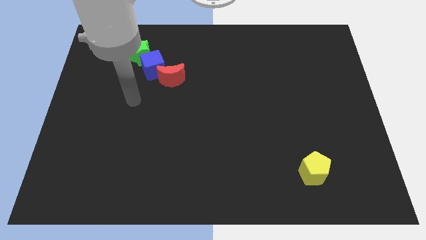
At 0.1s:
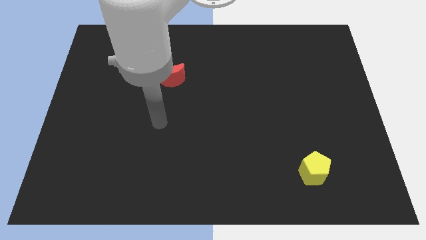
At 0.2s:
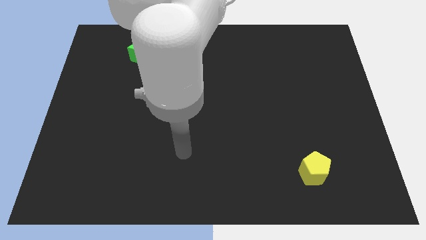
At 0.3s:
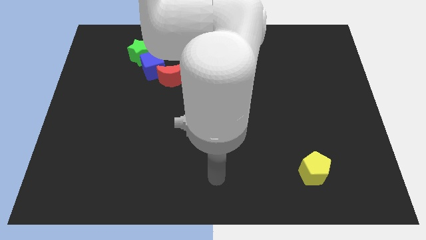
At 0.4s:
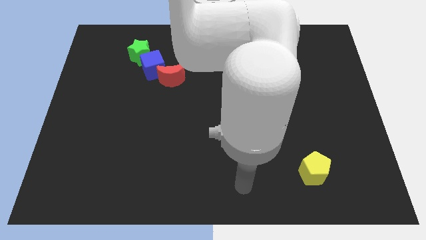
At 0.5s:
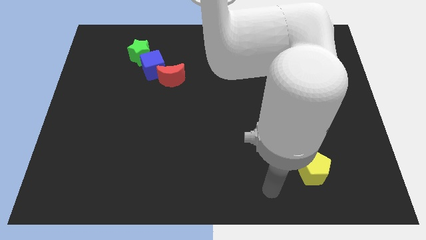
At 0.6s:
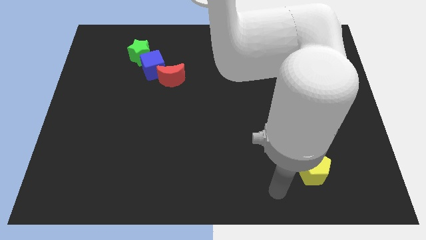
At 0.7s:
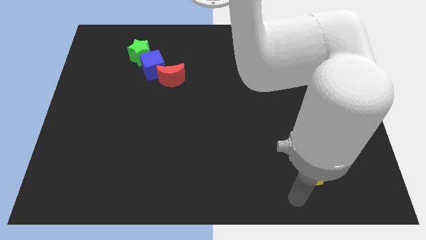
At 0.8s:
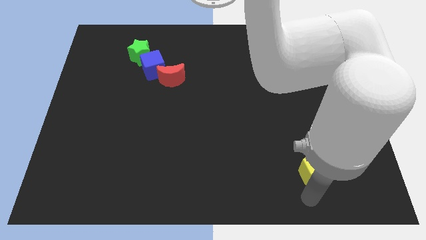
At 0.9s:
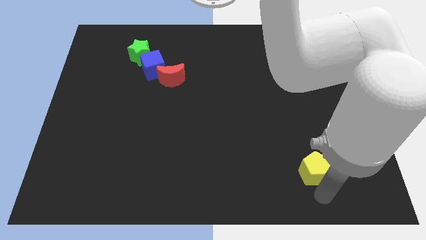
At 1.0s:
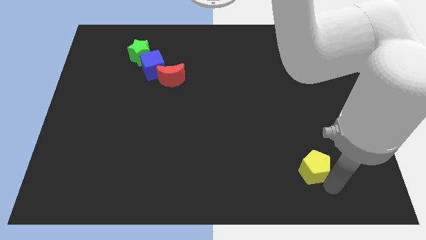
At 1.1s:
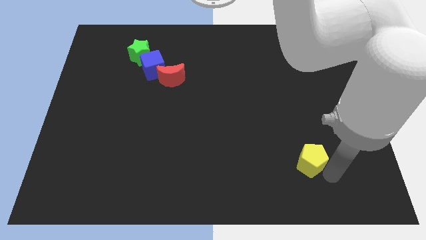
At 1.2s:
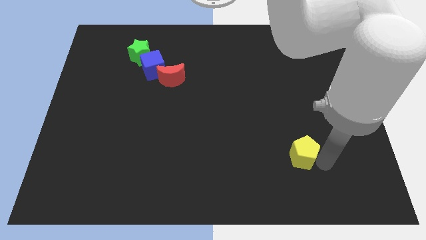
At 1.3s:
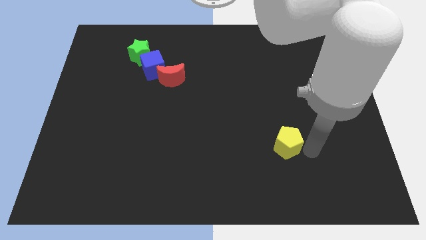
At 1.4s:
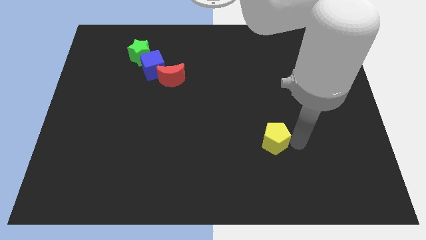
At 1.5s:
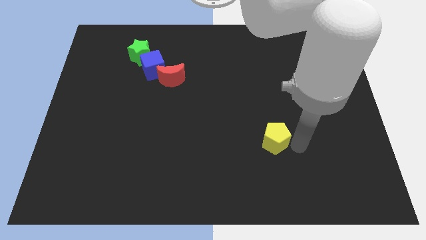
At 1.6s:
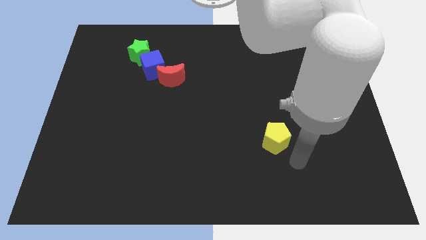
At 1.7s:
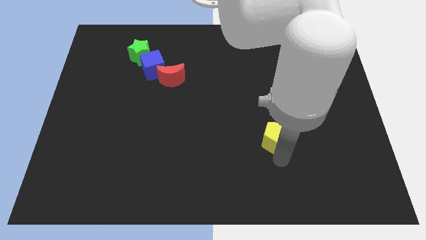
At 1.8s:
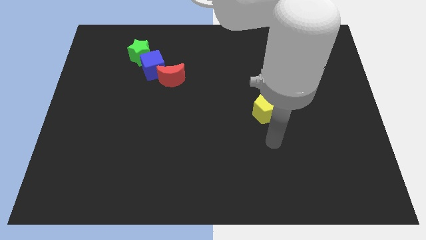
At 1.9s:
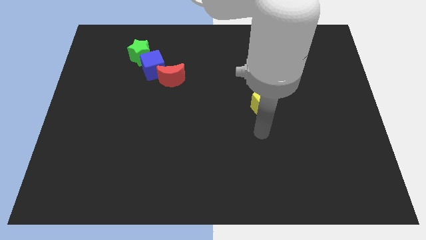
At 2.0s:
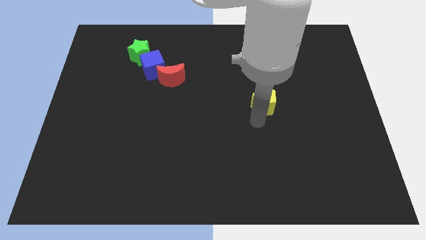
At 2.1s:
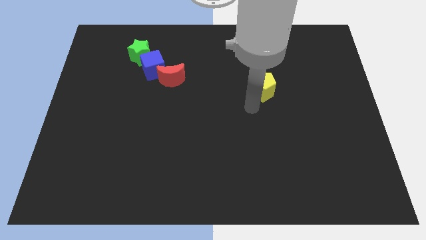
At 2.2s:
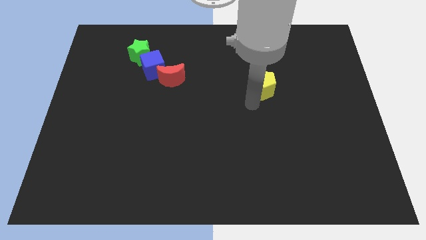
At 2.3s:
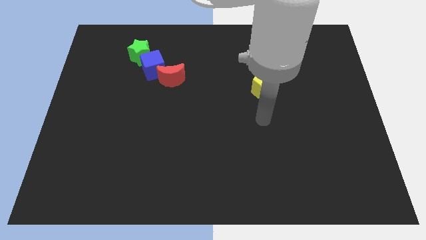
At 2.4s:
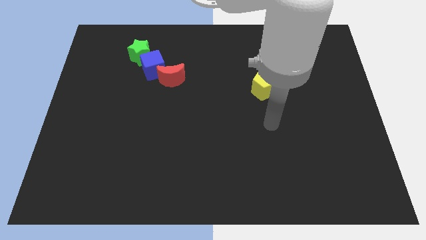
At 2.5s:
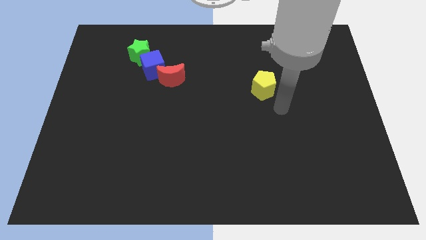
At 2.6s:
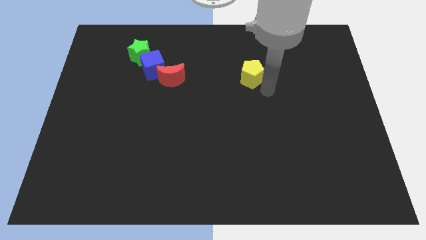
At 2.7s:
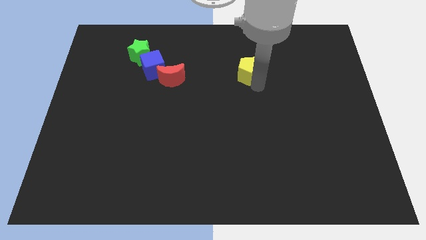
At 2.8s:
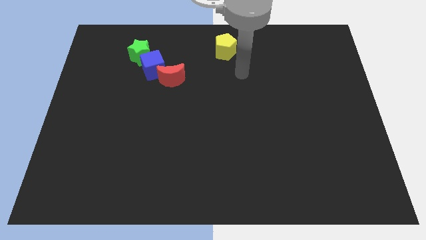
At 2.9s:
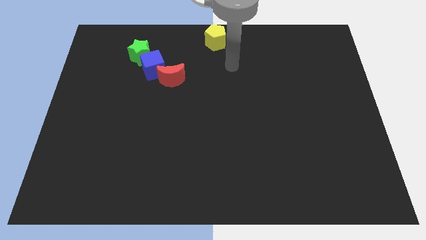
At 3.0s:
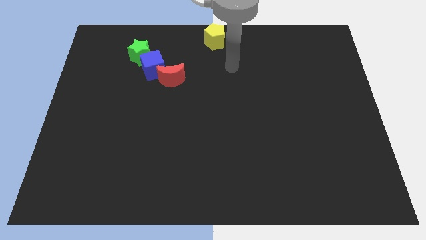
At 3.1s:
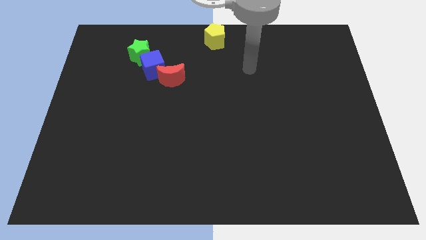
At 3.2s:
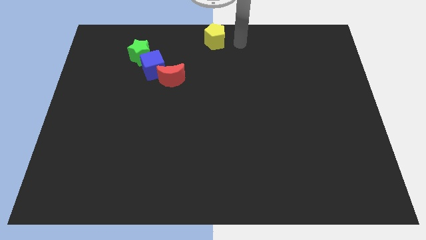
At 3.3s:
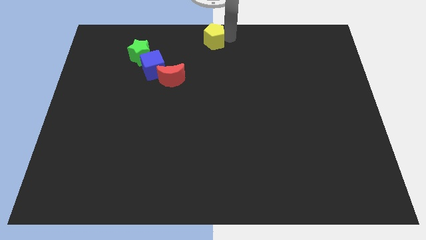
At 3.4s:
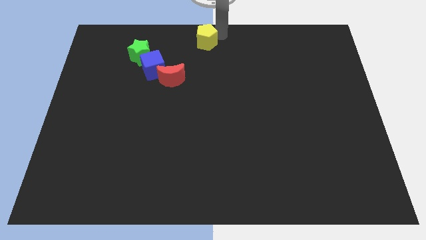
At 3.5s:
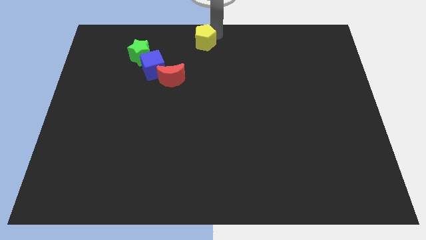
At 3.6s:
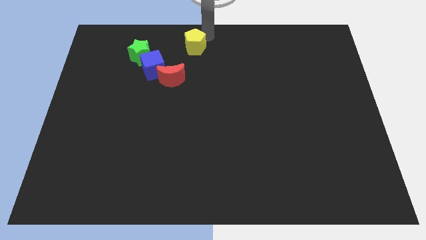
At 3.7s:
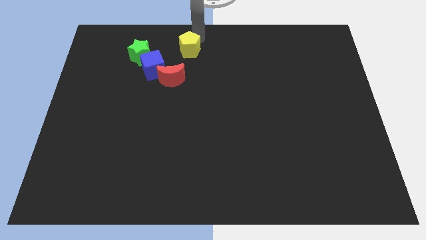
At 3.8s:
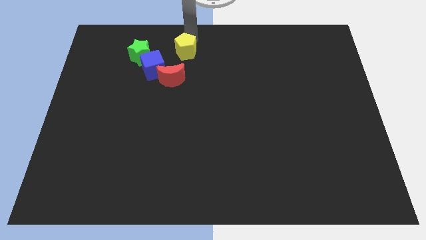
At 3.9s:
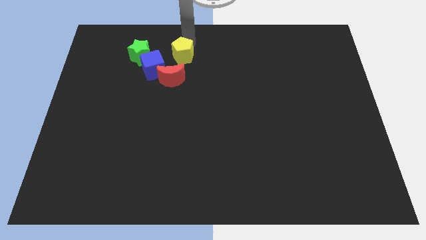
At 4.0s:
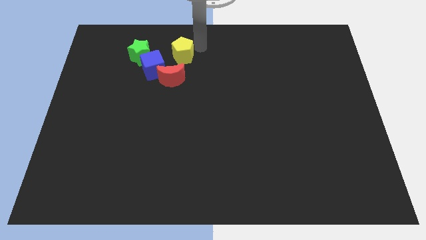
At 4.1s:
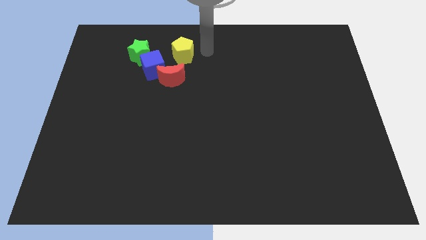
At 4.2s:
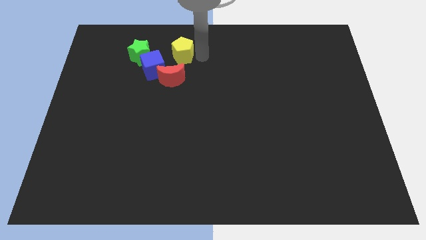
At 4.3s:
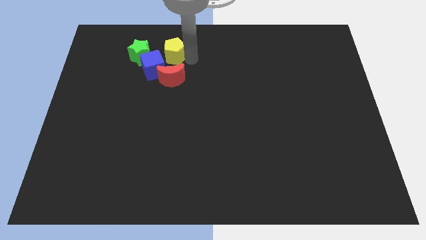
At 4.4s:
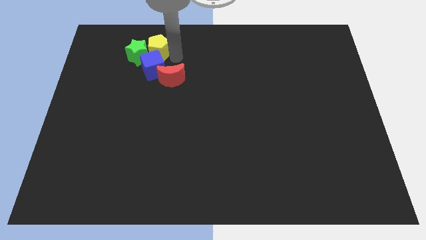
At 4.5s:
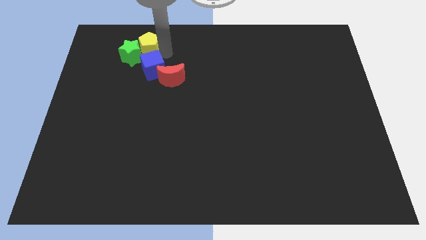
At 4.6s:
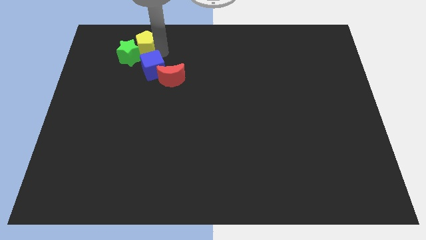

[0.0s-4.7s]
move the yellow pentagon close to the star

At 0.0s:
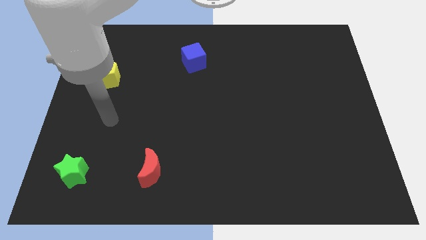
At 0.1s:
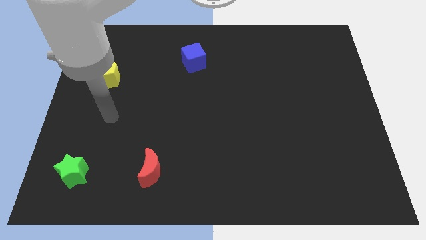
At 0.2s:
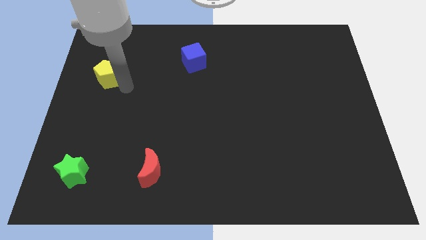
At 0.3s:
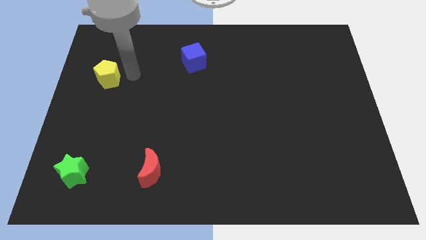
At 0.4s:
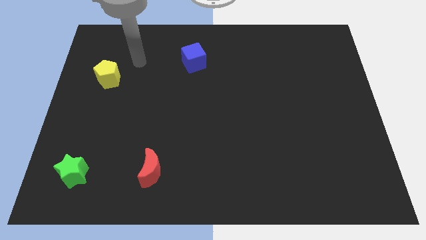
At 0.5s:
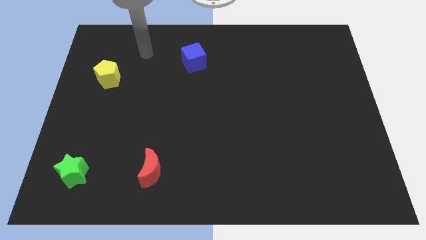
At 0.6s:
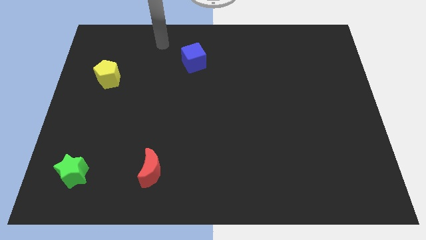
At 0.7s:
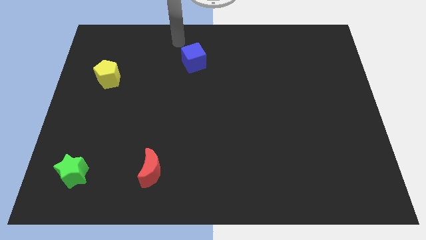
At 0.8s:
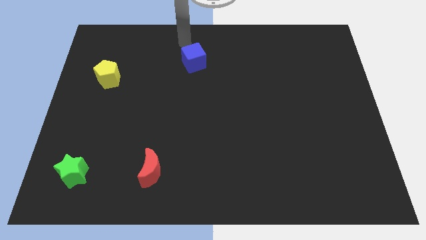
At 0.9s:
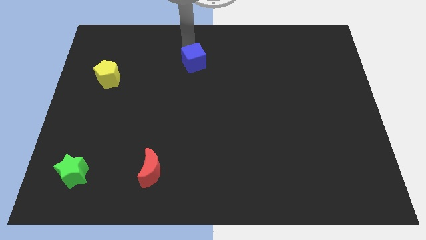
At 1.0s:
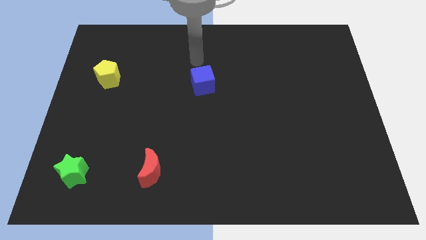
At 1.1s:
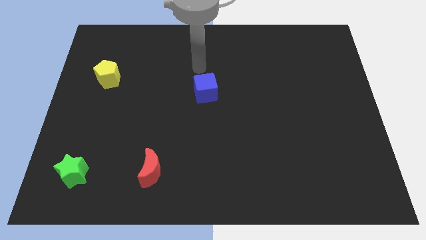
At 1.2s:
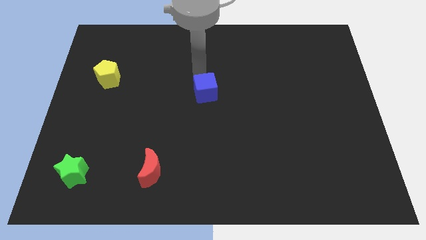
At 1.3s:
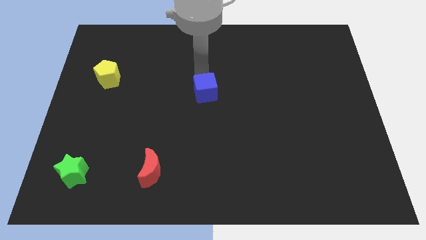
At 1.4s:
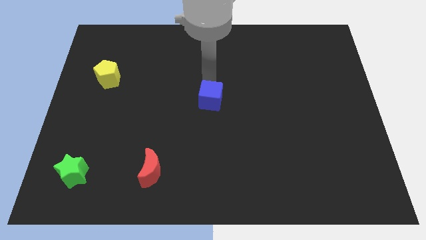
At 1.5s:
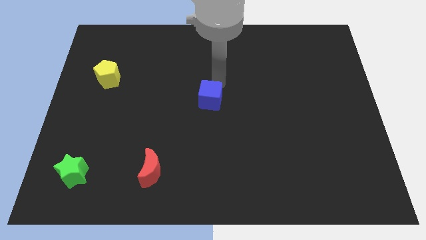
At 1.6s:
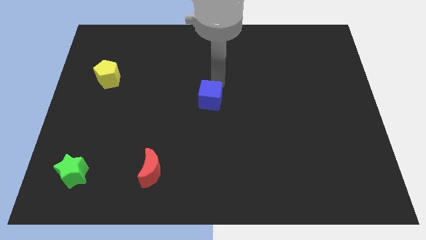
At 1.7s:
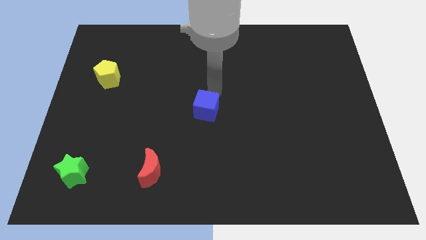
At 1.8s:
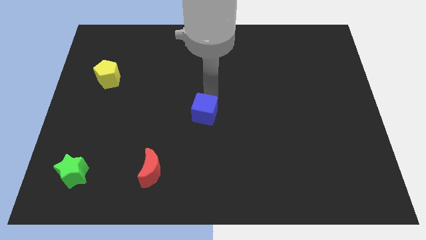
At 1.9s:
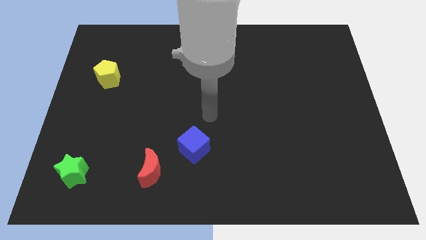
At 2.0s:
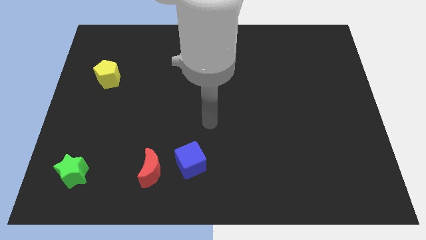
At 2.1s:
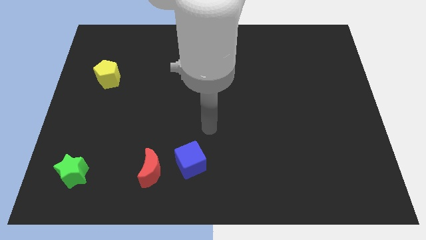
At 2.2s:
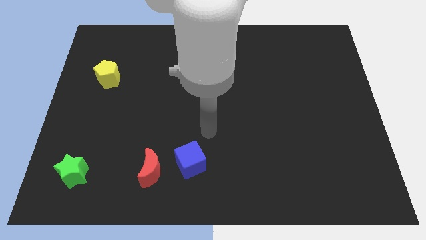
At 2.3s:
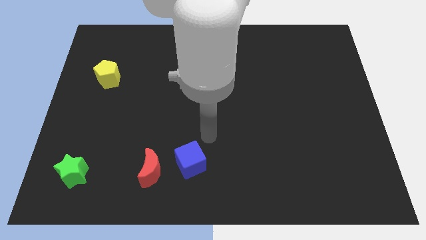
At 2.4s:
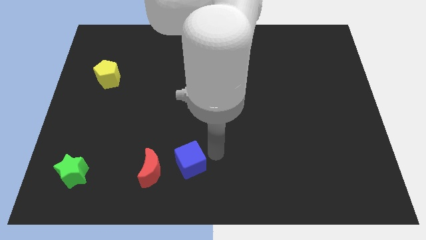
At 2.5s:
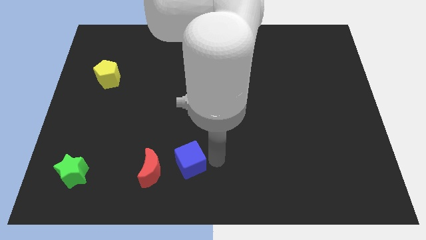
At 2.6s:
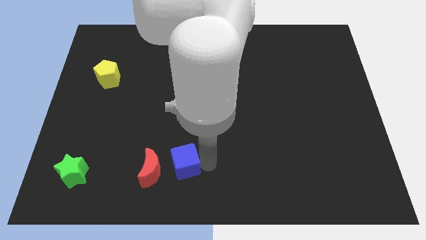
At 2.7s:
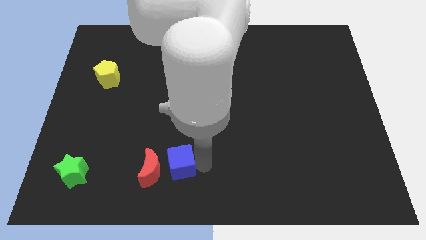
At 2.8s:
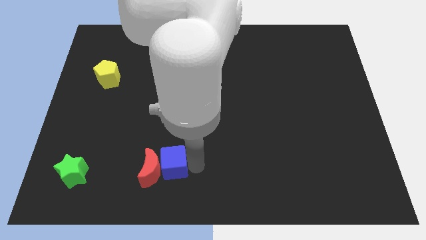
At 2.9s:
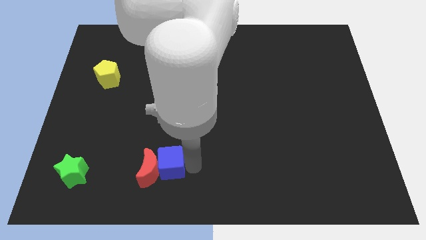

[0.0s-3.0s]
put the cube next to the moon

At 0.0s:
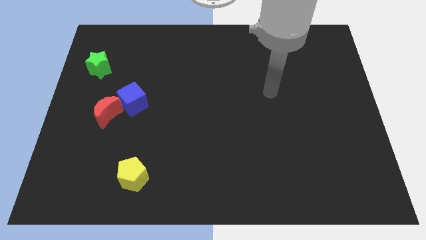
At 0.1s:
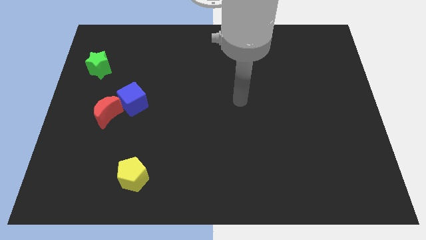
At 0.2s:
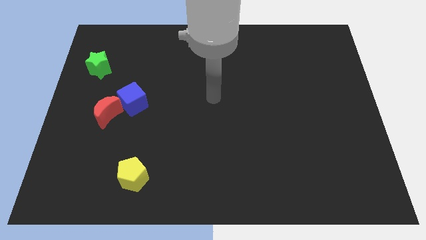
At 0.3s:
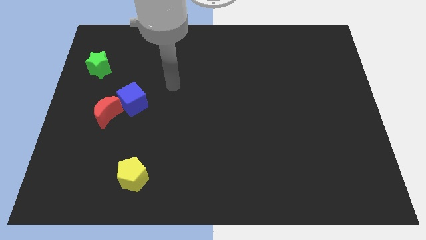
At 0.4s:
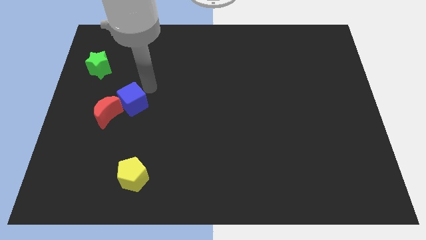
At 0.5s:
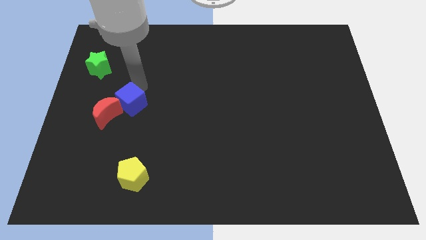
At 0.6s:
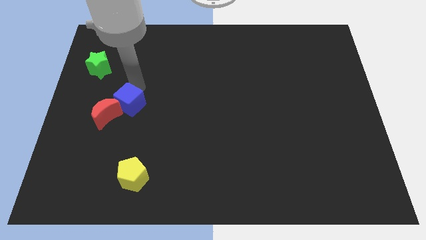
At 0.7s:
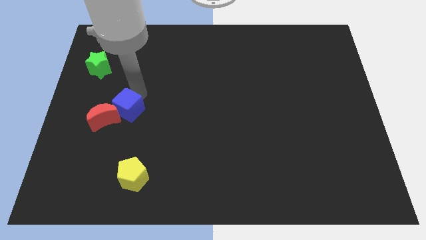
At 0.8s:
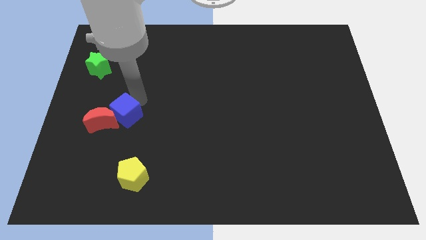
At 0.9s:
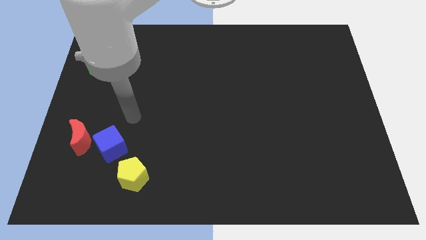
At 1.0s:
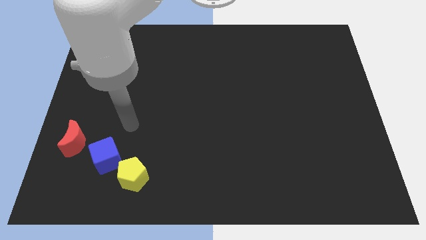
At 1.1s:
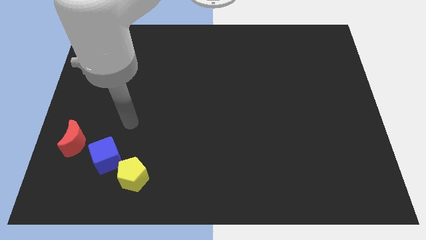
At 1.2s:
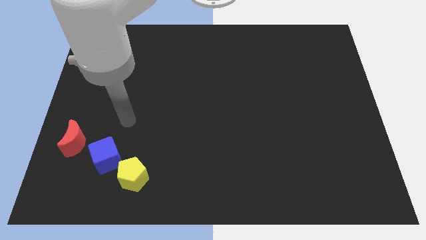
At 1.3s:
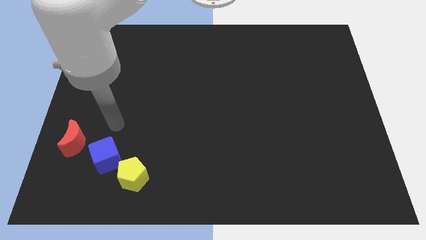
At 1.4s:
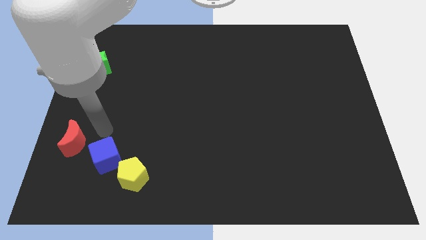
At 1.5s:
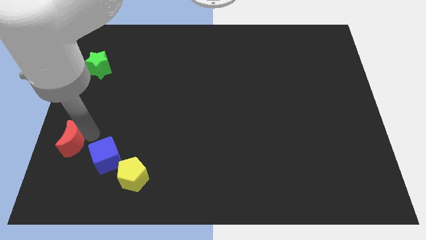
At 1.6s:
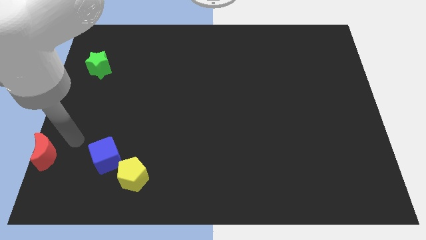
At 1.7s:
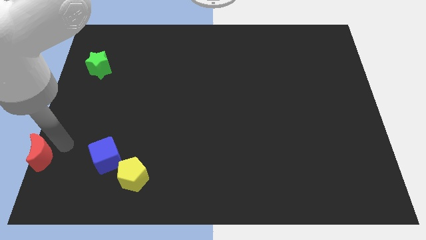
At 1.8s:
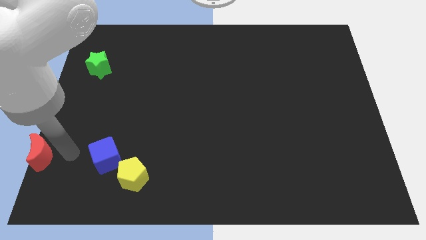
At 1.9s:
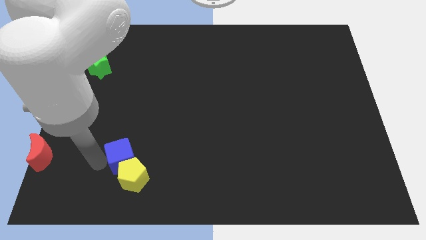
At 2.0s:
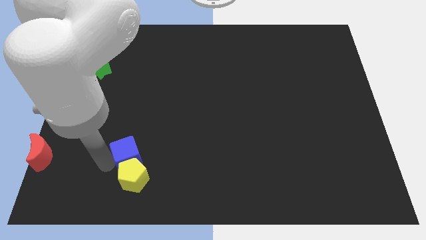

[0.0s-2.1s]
push the blue block to the pentagon
